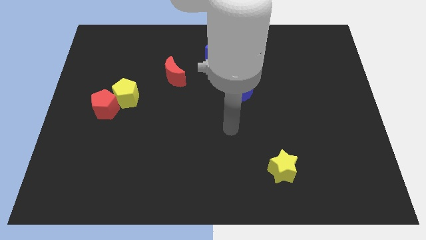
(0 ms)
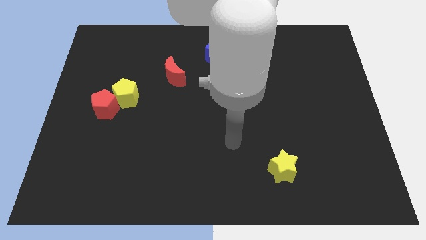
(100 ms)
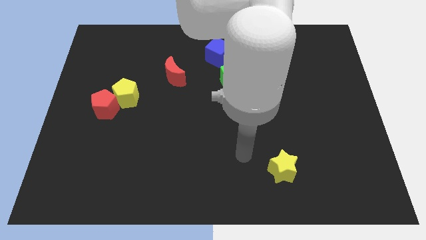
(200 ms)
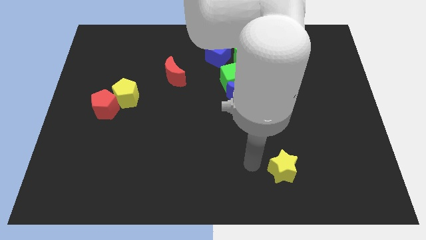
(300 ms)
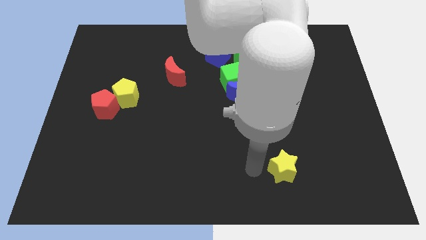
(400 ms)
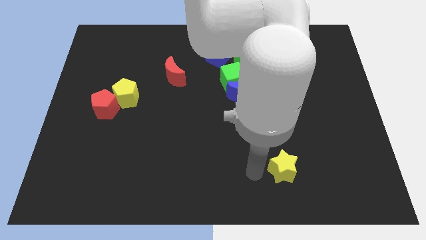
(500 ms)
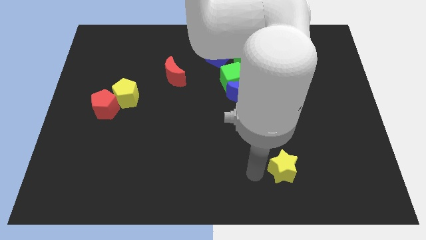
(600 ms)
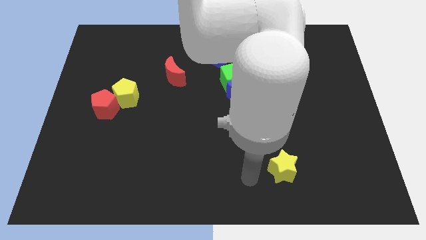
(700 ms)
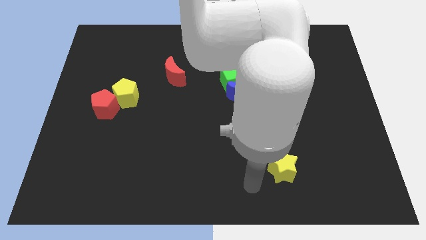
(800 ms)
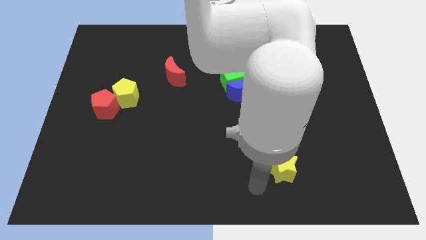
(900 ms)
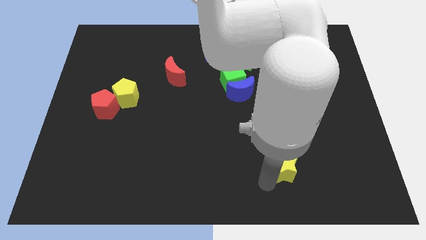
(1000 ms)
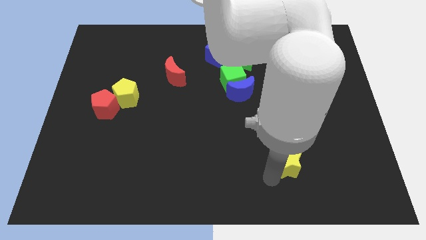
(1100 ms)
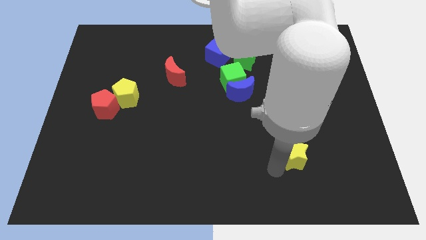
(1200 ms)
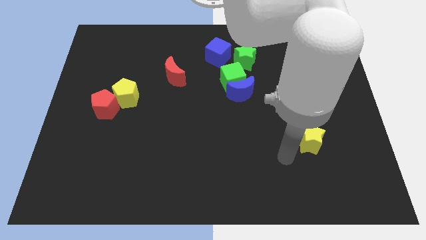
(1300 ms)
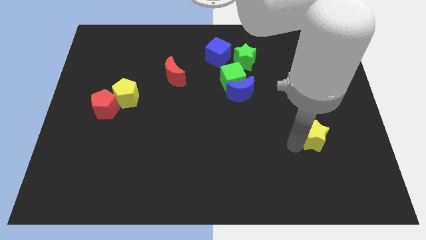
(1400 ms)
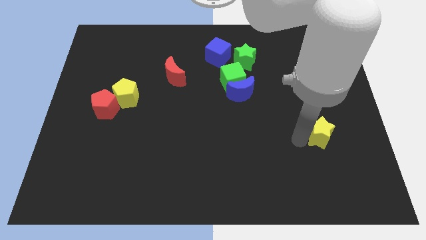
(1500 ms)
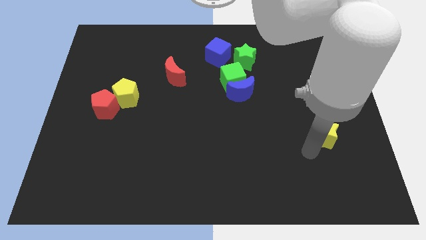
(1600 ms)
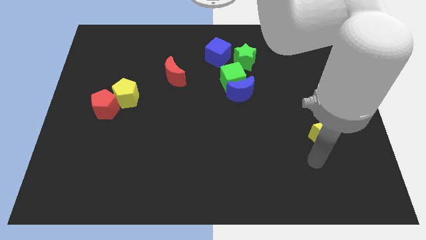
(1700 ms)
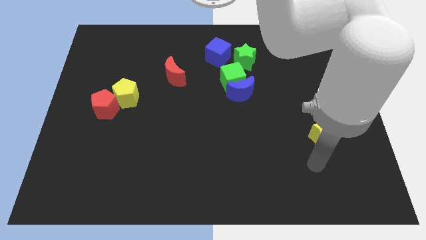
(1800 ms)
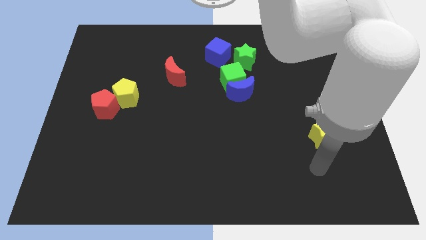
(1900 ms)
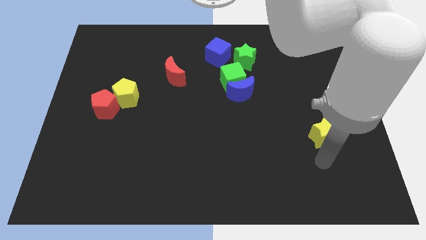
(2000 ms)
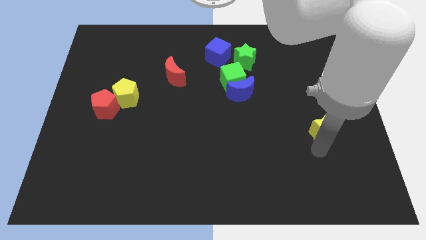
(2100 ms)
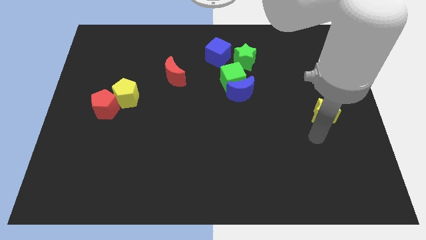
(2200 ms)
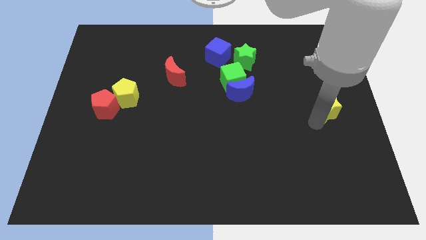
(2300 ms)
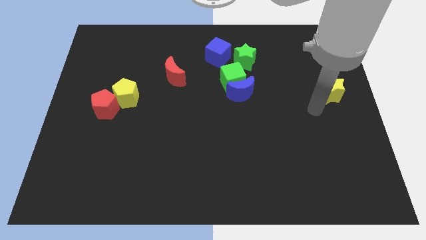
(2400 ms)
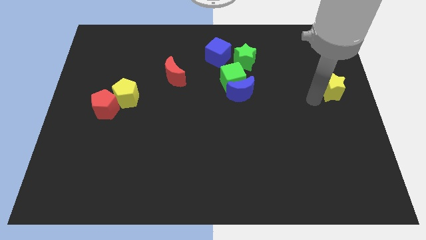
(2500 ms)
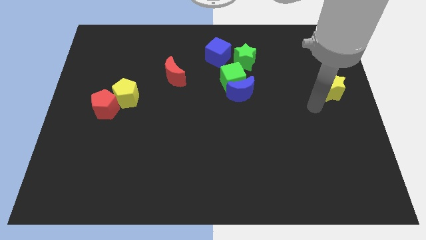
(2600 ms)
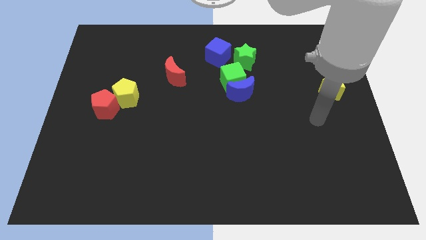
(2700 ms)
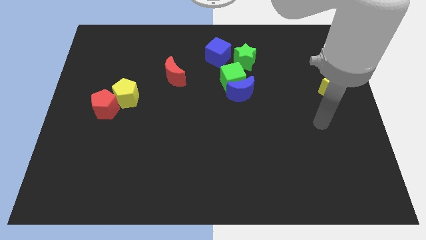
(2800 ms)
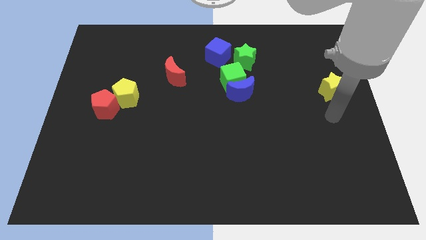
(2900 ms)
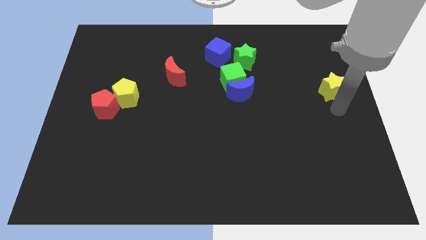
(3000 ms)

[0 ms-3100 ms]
move the yellow star to the horizontal right side of the blue moon

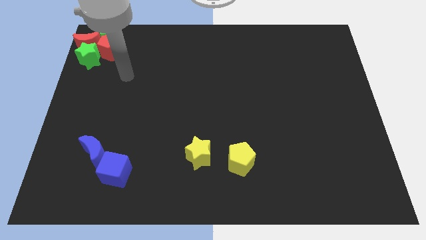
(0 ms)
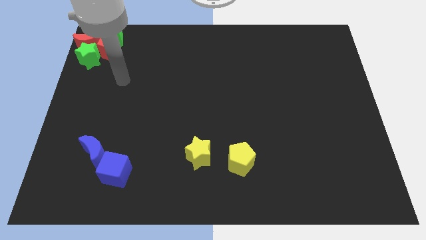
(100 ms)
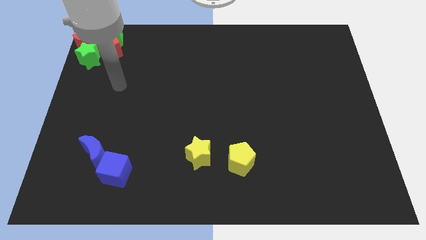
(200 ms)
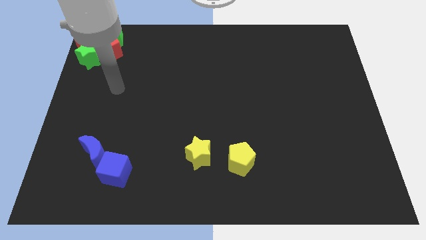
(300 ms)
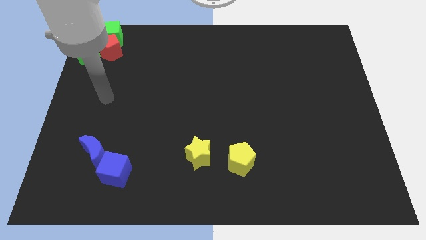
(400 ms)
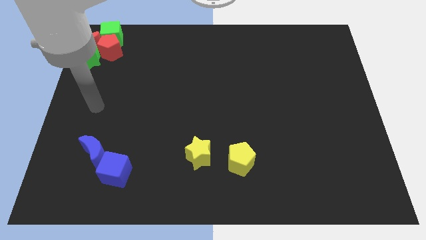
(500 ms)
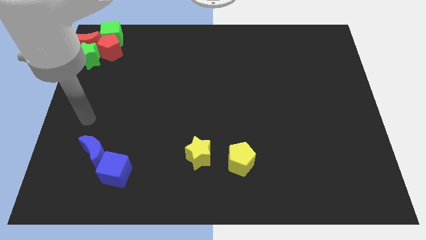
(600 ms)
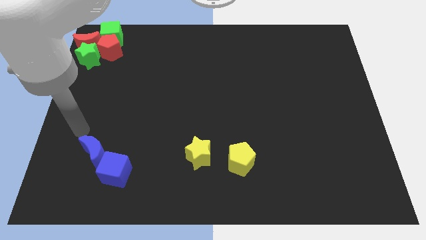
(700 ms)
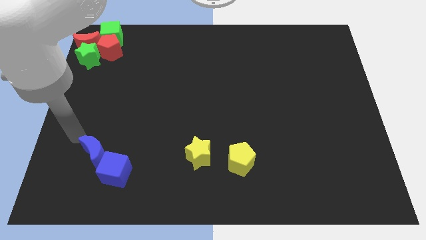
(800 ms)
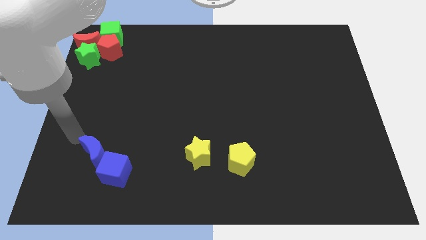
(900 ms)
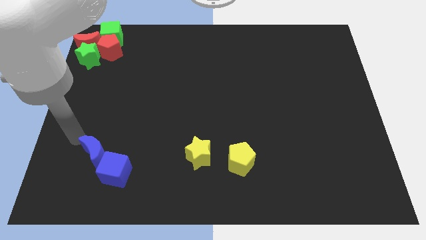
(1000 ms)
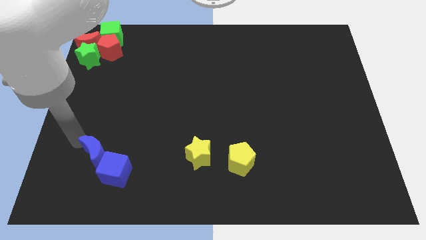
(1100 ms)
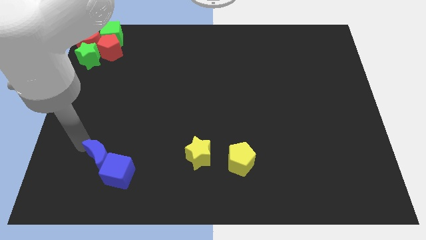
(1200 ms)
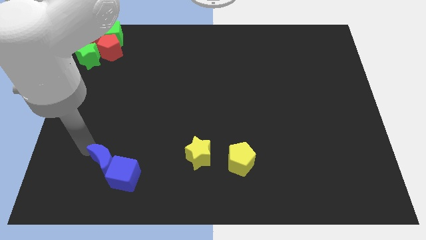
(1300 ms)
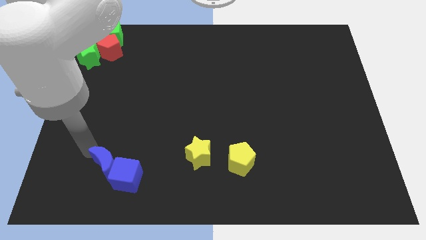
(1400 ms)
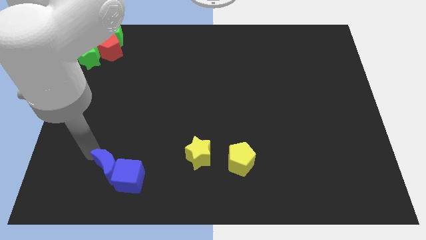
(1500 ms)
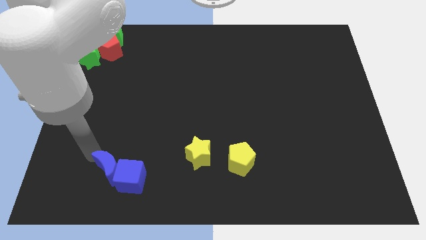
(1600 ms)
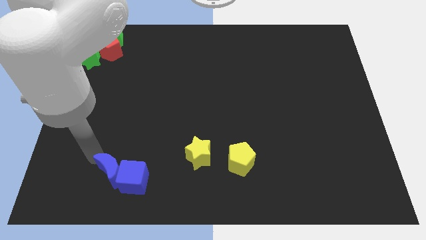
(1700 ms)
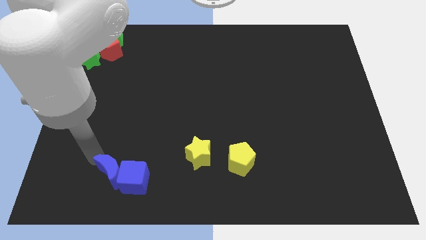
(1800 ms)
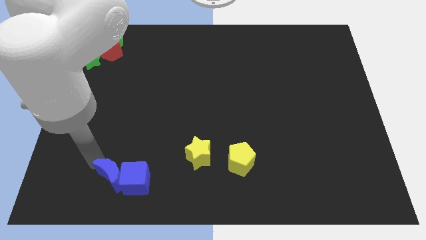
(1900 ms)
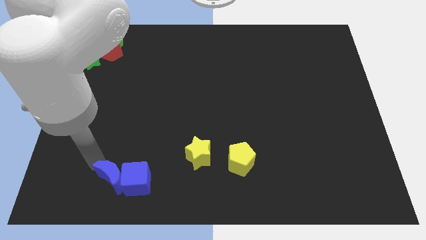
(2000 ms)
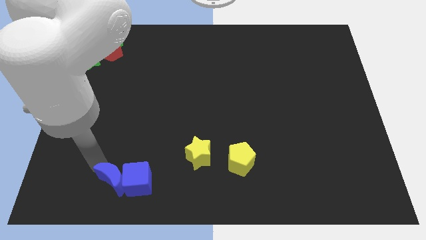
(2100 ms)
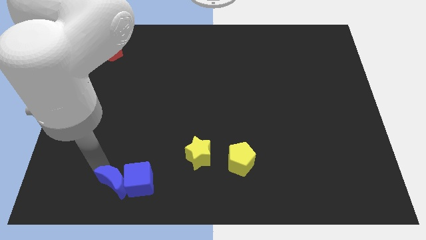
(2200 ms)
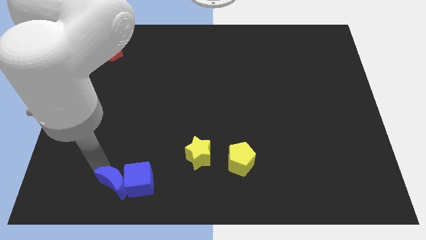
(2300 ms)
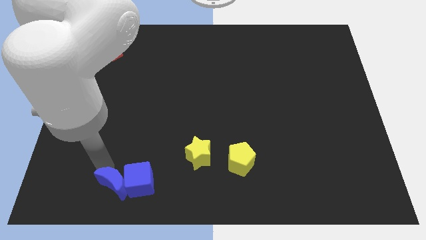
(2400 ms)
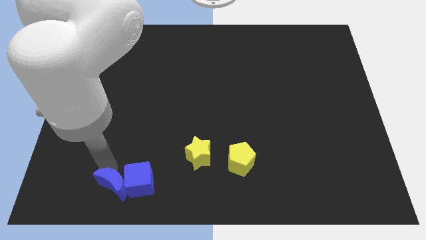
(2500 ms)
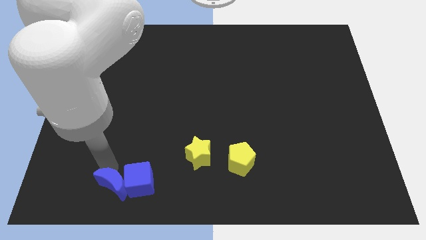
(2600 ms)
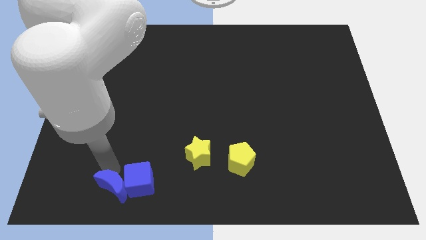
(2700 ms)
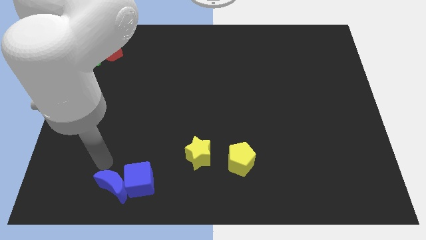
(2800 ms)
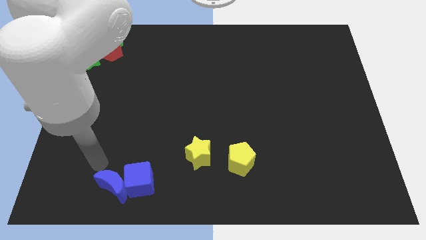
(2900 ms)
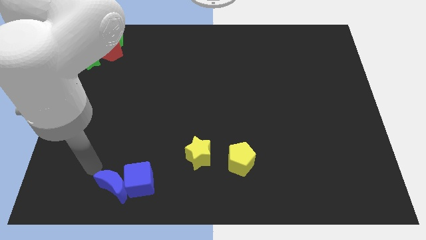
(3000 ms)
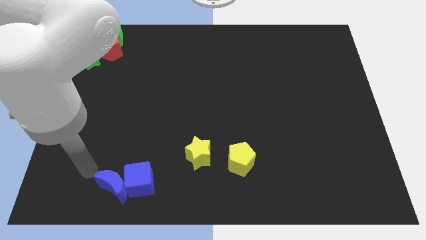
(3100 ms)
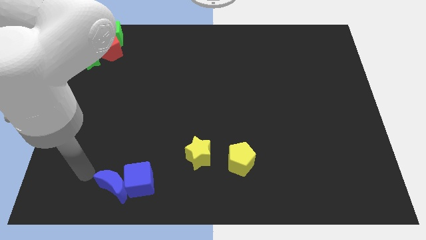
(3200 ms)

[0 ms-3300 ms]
move the group of blue blocks slightly towards the bottom side of the board

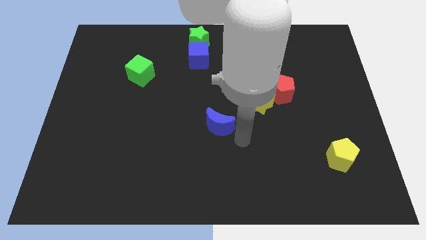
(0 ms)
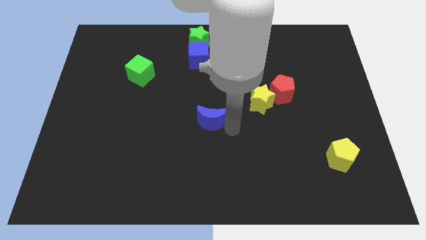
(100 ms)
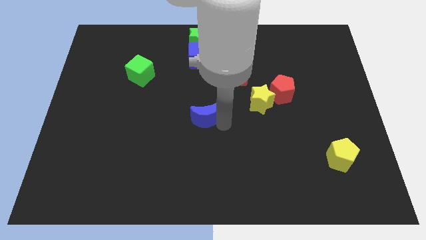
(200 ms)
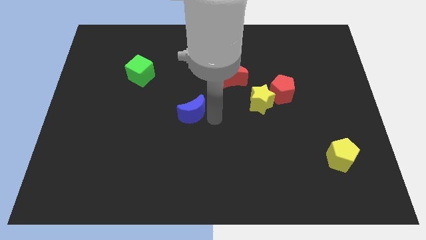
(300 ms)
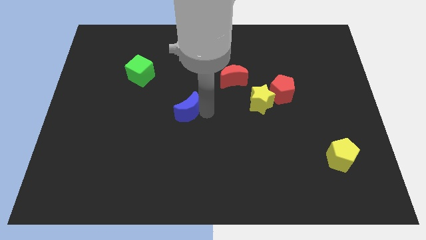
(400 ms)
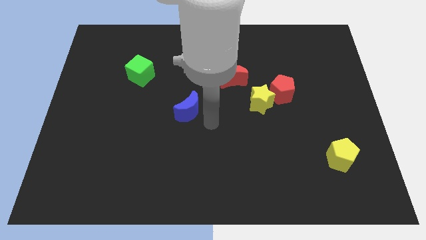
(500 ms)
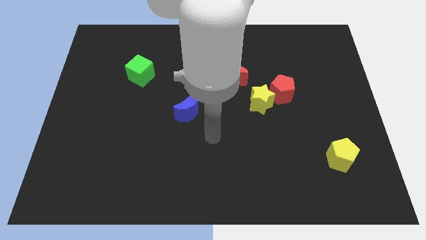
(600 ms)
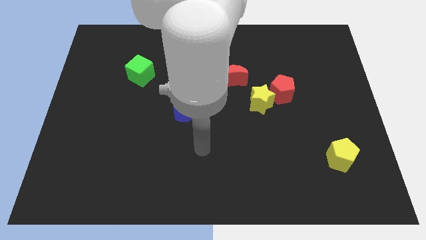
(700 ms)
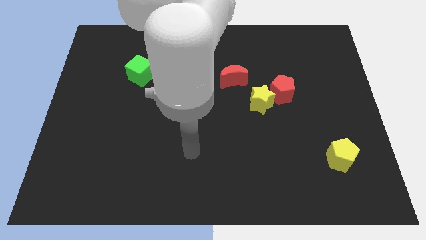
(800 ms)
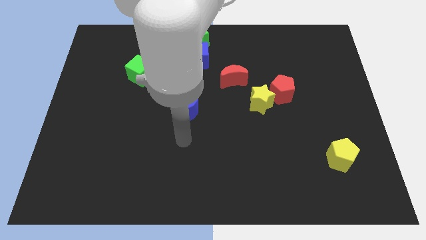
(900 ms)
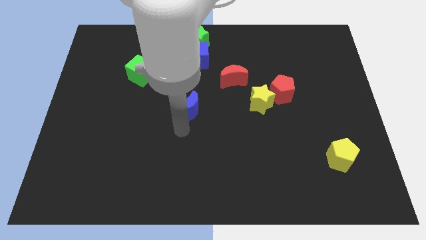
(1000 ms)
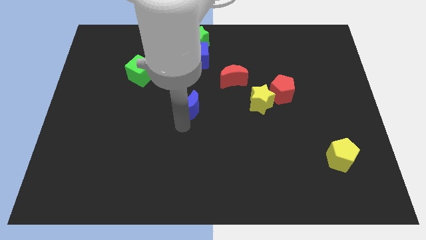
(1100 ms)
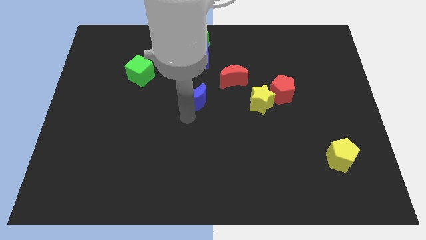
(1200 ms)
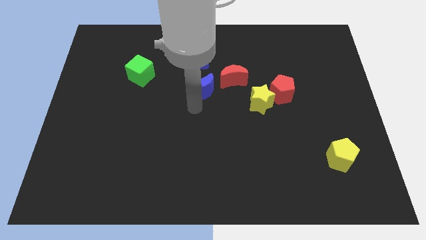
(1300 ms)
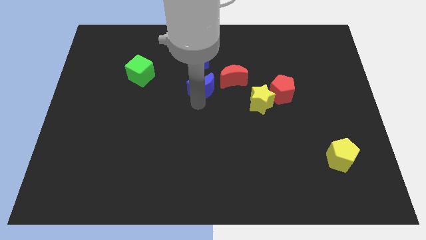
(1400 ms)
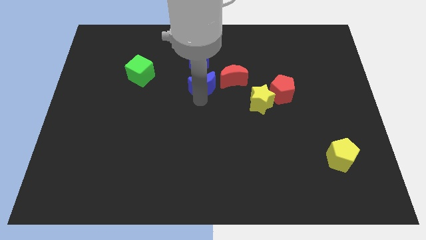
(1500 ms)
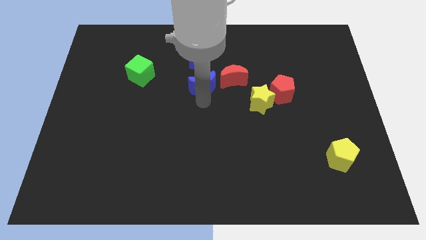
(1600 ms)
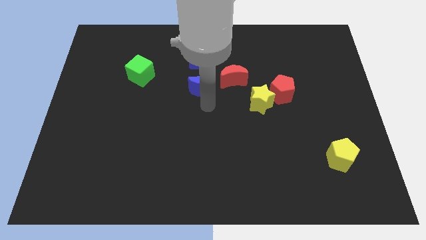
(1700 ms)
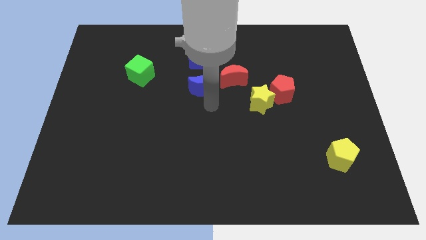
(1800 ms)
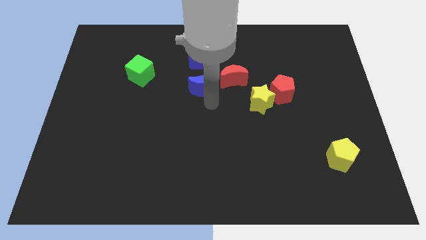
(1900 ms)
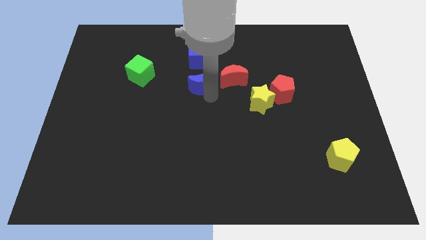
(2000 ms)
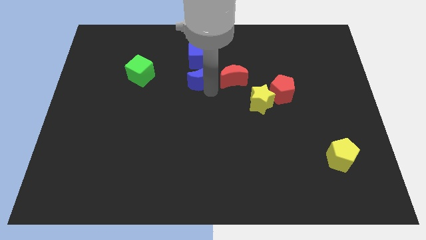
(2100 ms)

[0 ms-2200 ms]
move the blue moon near to the blue cube

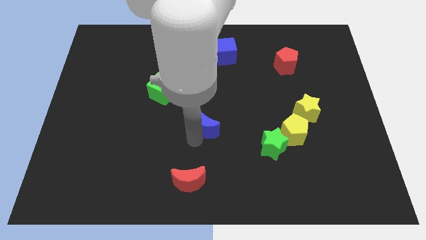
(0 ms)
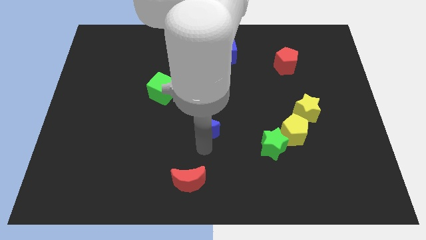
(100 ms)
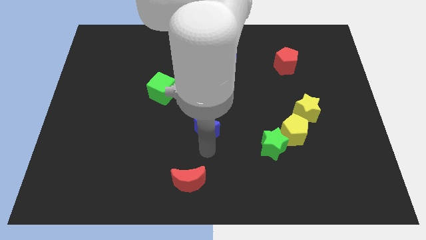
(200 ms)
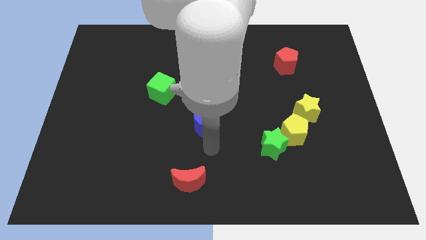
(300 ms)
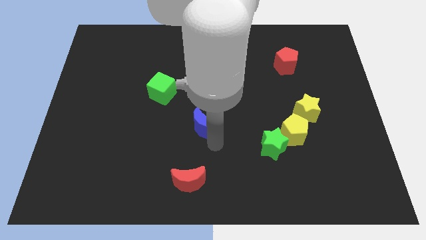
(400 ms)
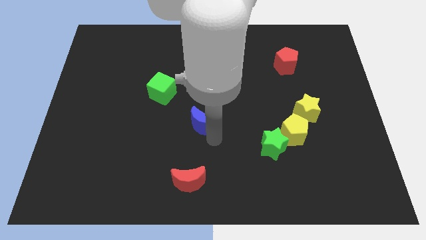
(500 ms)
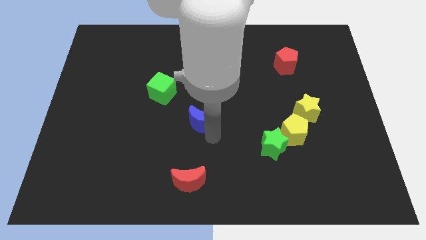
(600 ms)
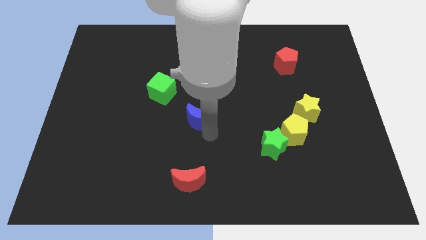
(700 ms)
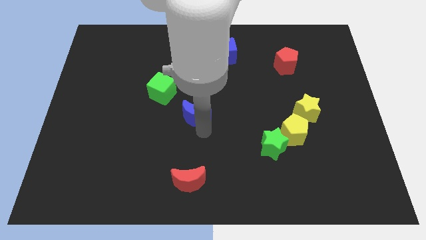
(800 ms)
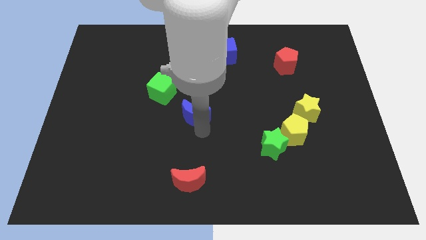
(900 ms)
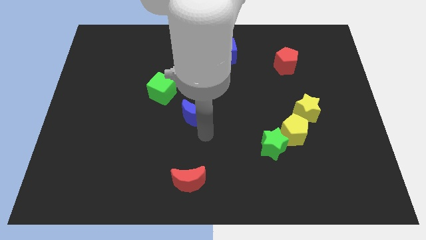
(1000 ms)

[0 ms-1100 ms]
move blue moon slightly upward
